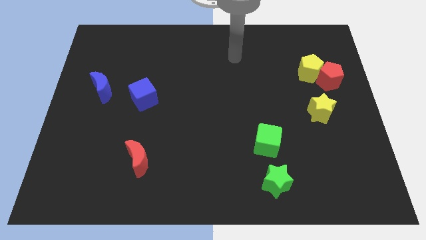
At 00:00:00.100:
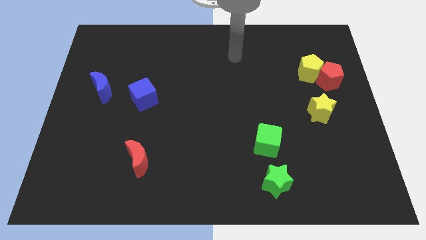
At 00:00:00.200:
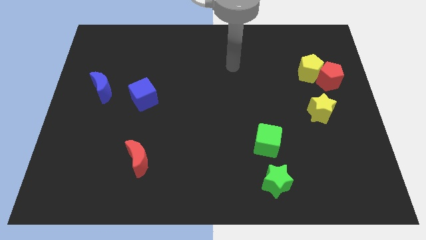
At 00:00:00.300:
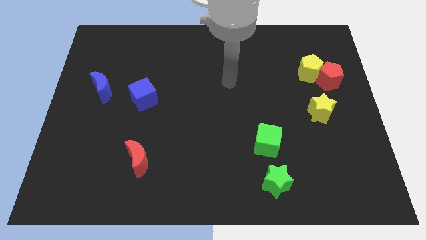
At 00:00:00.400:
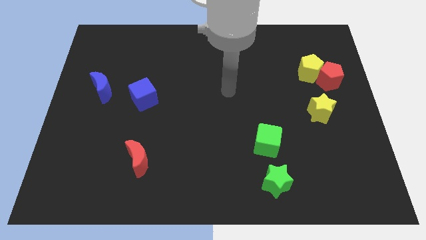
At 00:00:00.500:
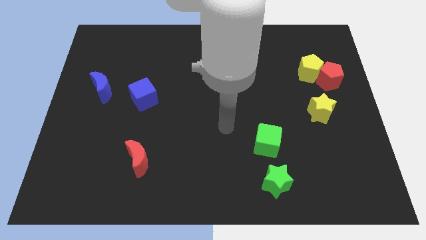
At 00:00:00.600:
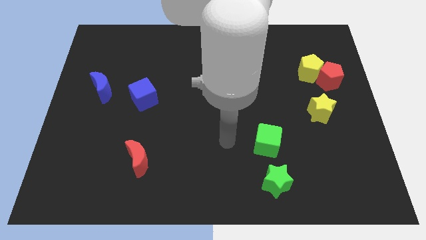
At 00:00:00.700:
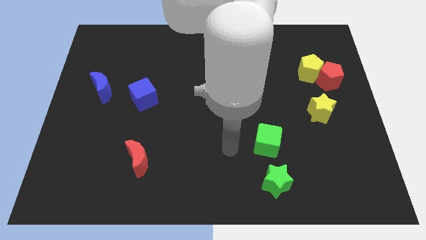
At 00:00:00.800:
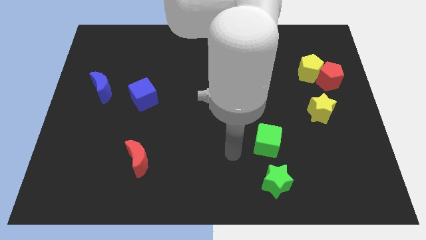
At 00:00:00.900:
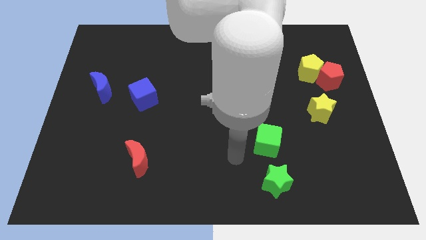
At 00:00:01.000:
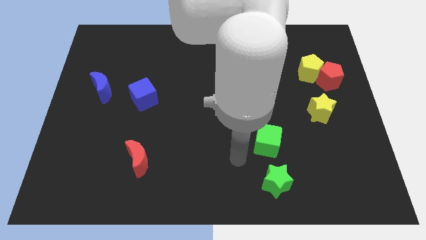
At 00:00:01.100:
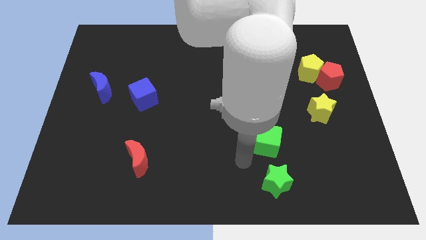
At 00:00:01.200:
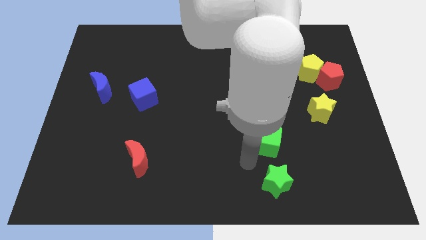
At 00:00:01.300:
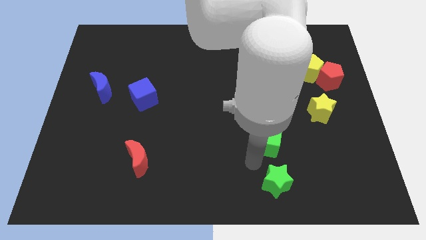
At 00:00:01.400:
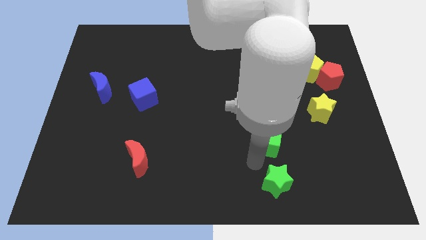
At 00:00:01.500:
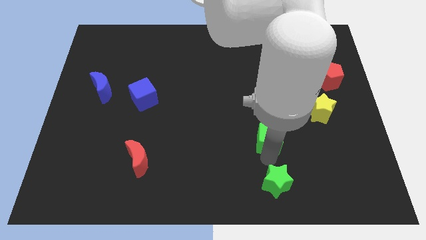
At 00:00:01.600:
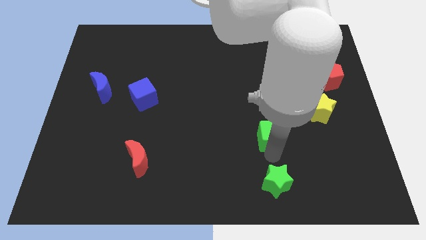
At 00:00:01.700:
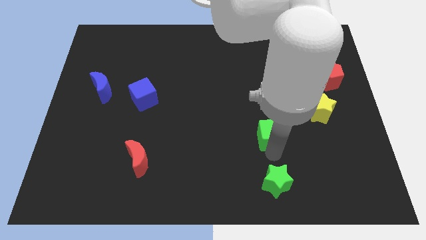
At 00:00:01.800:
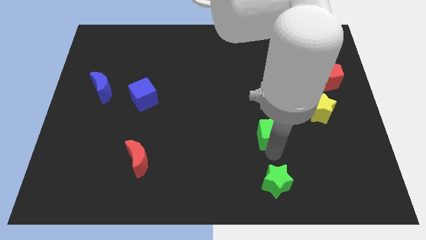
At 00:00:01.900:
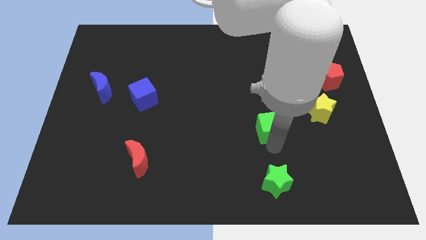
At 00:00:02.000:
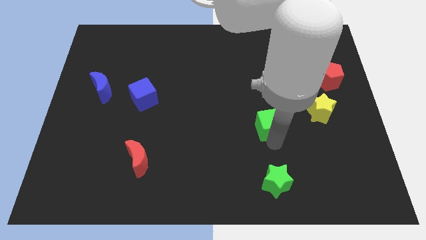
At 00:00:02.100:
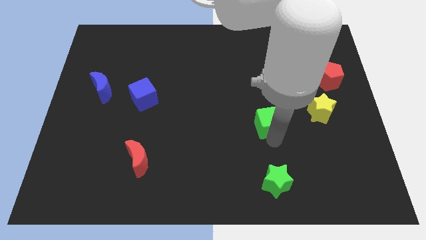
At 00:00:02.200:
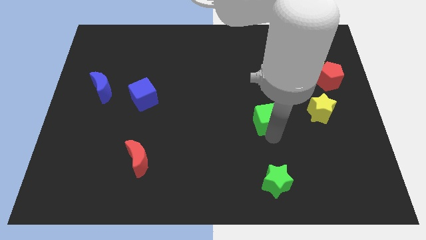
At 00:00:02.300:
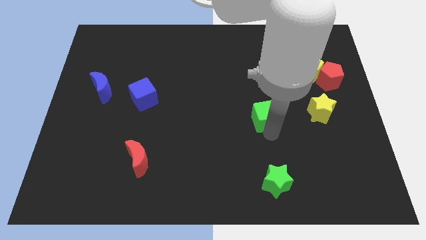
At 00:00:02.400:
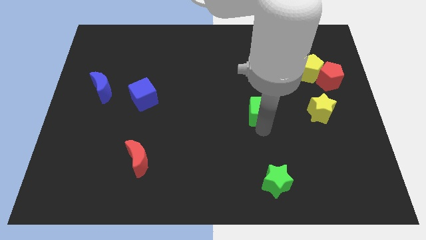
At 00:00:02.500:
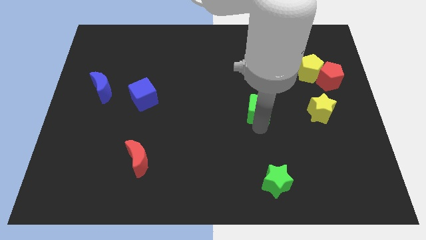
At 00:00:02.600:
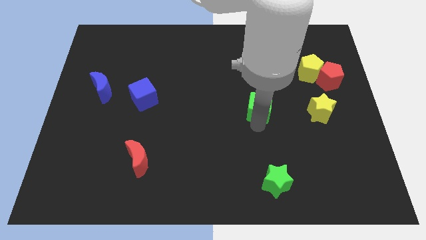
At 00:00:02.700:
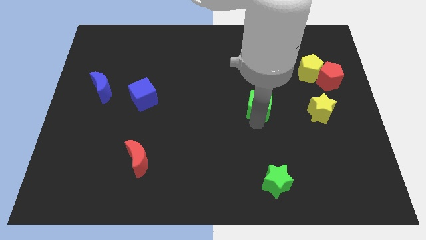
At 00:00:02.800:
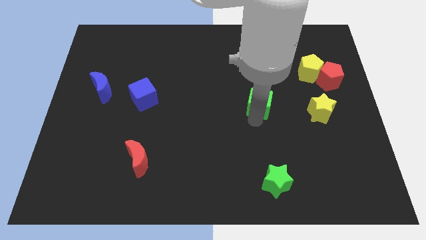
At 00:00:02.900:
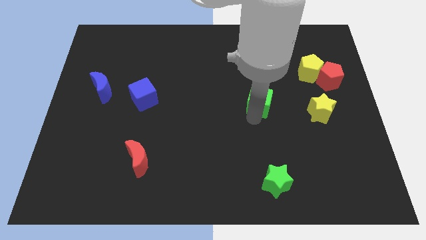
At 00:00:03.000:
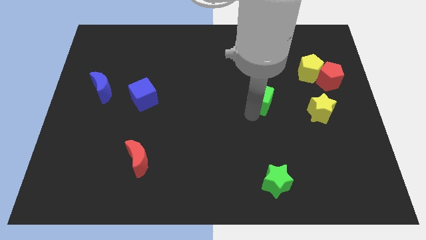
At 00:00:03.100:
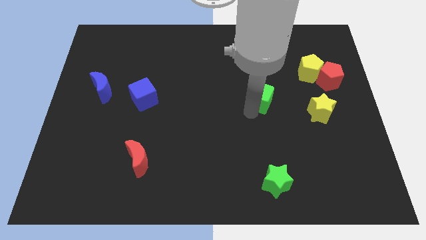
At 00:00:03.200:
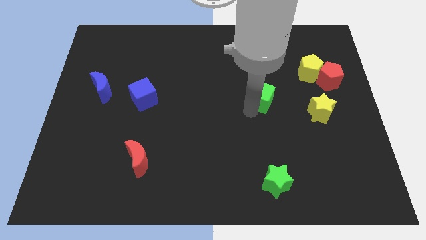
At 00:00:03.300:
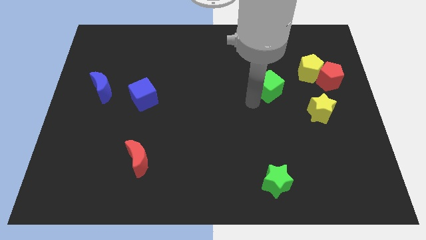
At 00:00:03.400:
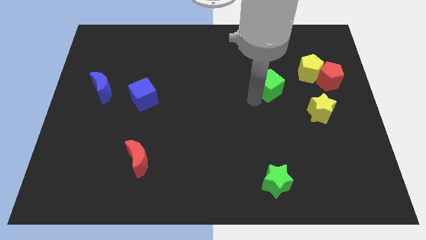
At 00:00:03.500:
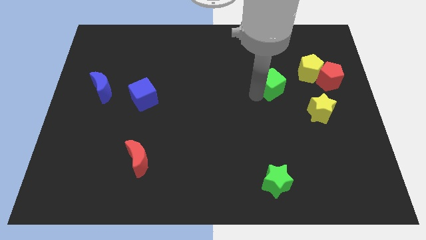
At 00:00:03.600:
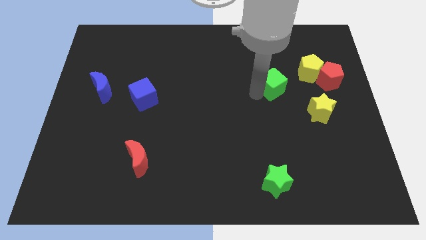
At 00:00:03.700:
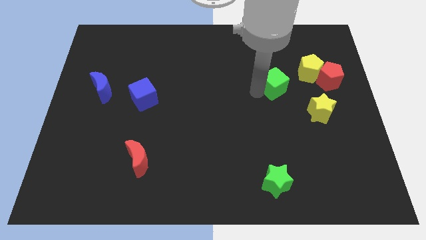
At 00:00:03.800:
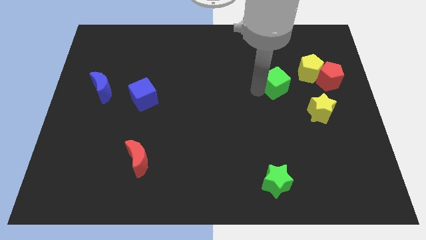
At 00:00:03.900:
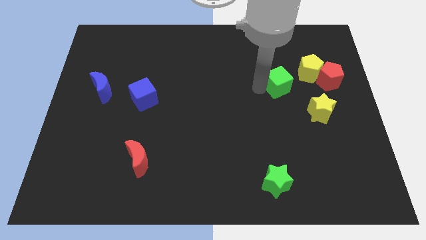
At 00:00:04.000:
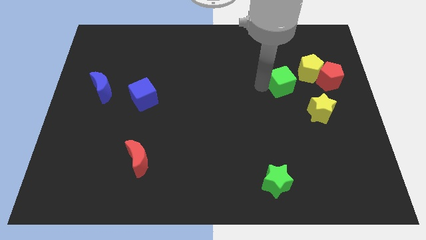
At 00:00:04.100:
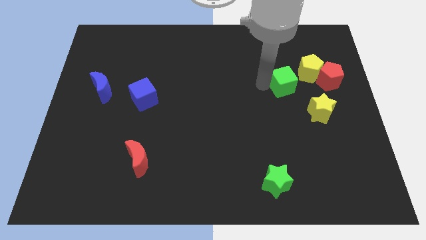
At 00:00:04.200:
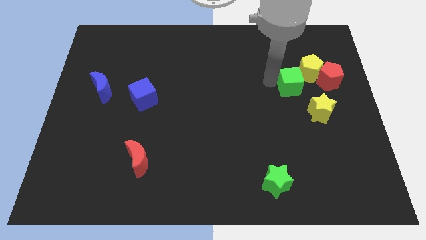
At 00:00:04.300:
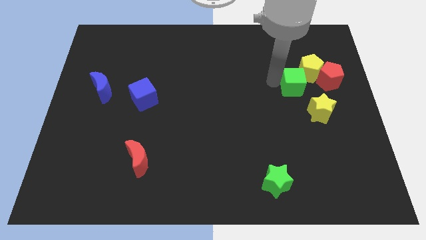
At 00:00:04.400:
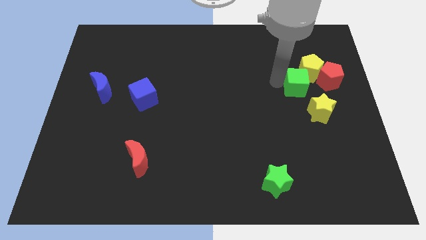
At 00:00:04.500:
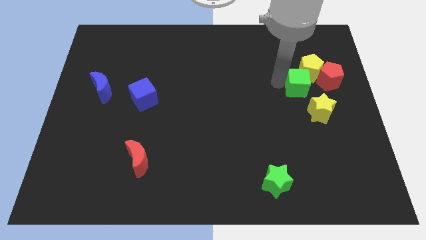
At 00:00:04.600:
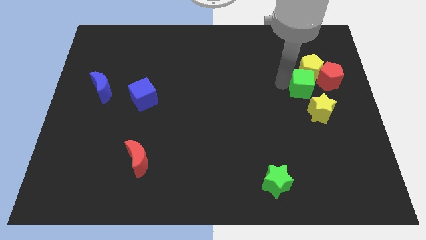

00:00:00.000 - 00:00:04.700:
push the green cube close to the yellow pentagon

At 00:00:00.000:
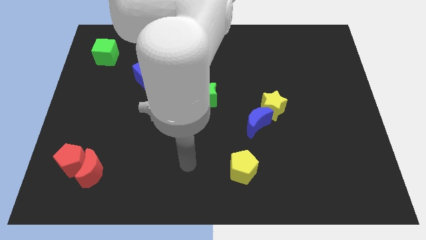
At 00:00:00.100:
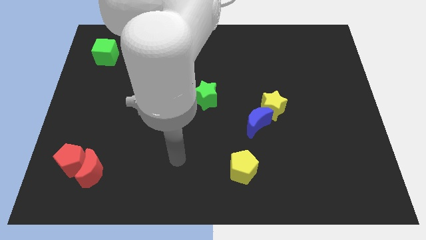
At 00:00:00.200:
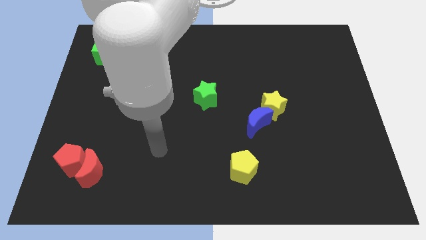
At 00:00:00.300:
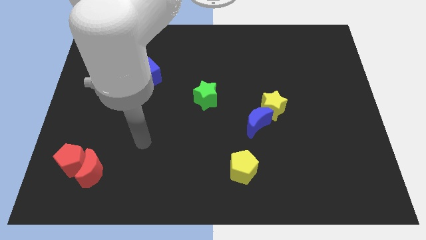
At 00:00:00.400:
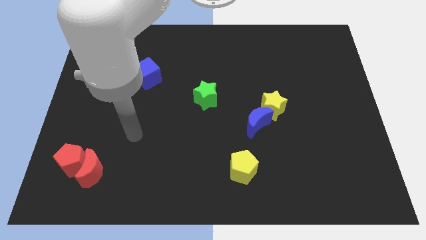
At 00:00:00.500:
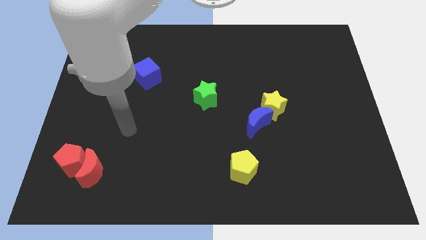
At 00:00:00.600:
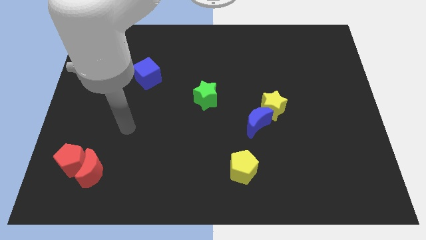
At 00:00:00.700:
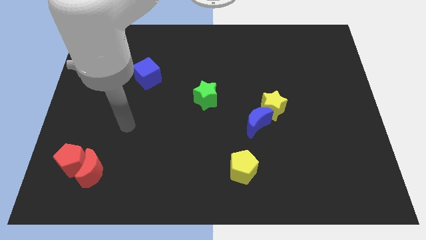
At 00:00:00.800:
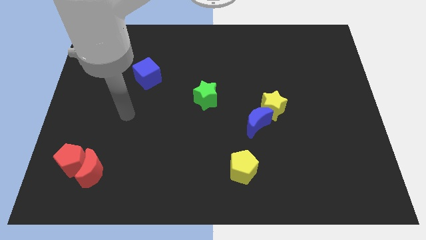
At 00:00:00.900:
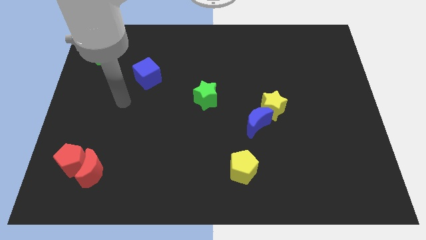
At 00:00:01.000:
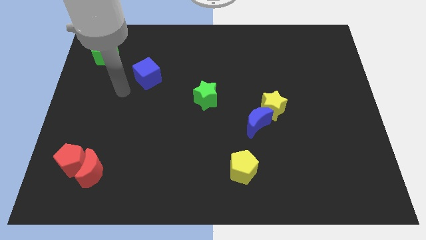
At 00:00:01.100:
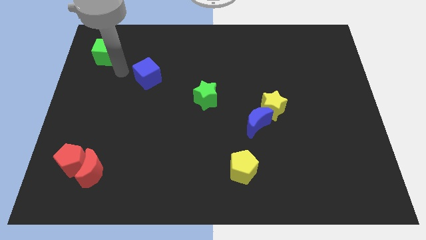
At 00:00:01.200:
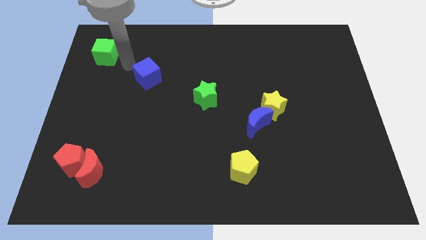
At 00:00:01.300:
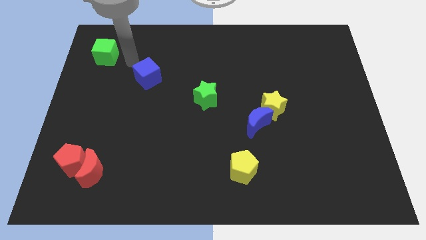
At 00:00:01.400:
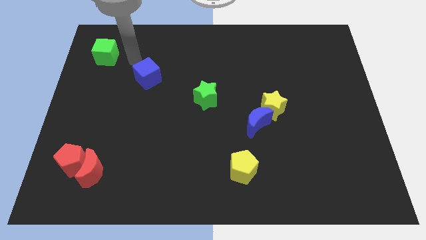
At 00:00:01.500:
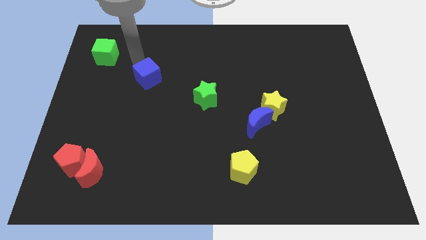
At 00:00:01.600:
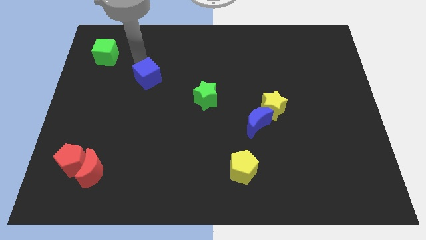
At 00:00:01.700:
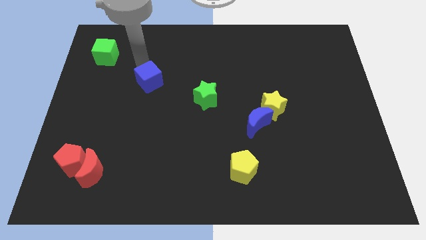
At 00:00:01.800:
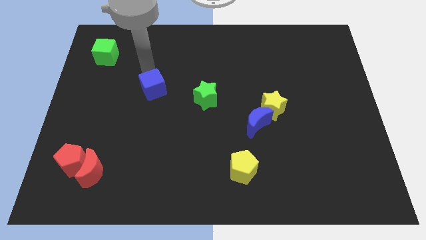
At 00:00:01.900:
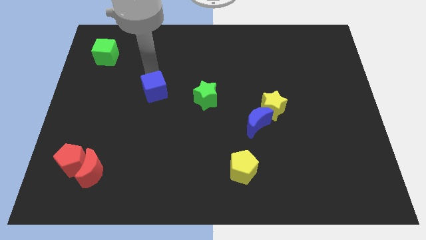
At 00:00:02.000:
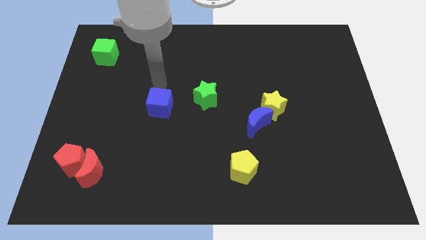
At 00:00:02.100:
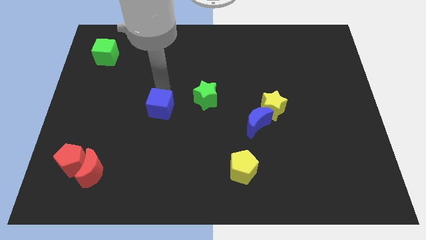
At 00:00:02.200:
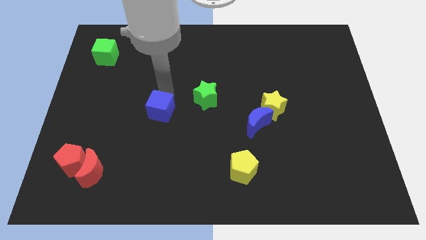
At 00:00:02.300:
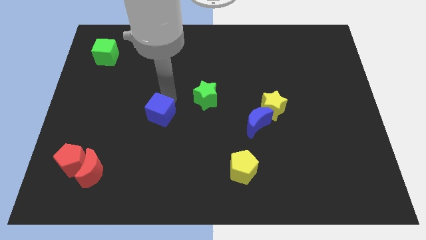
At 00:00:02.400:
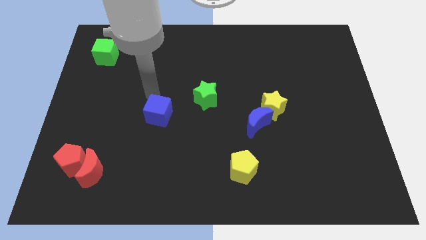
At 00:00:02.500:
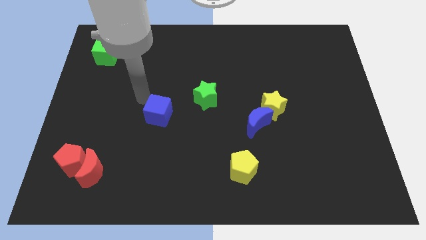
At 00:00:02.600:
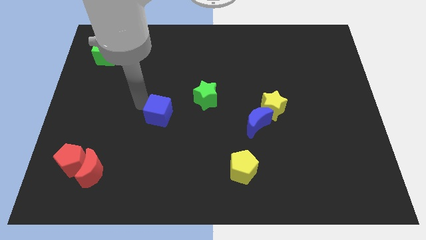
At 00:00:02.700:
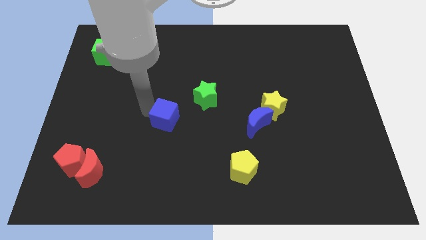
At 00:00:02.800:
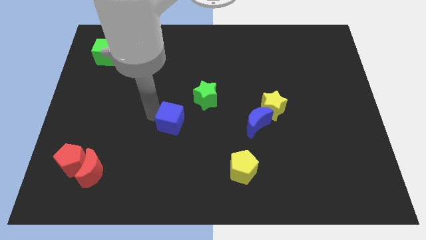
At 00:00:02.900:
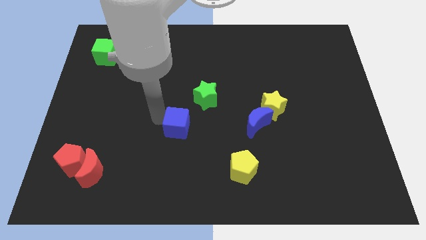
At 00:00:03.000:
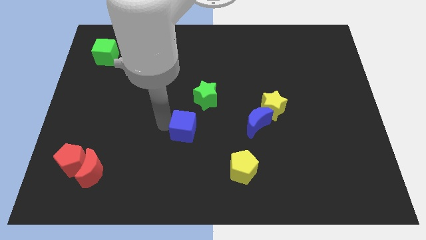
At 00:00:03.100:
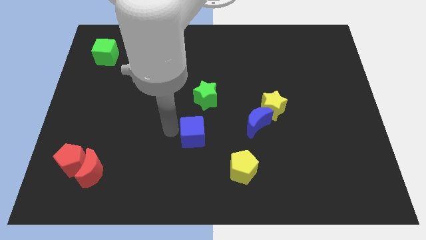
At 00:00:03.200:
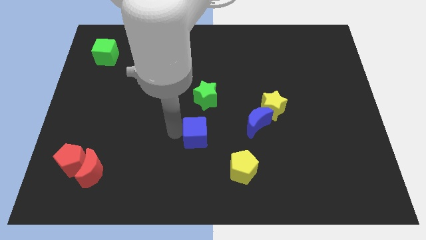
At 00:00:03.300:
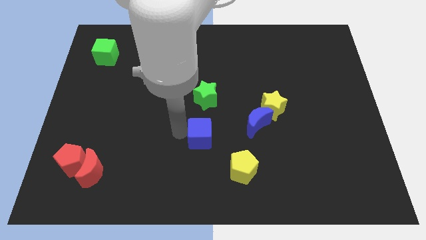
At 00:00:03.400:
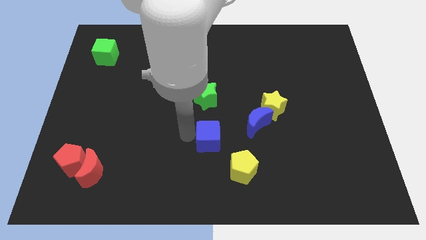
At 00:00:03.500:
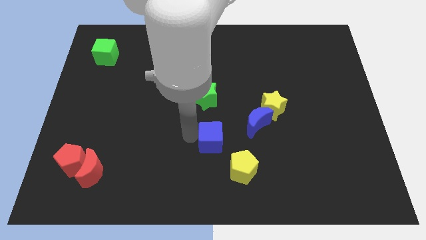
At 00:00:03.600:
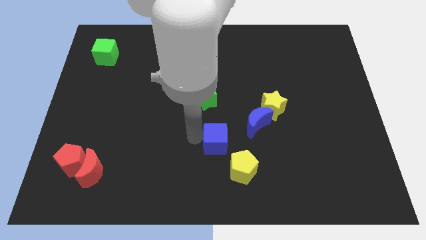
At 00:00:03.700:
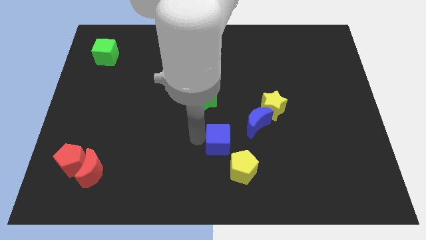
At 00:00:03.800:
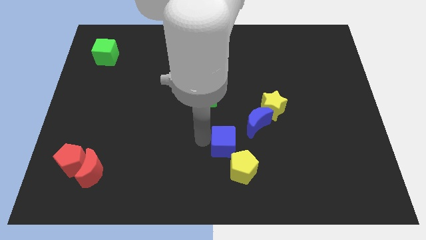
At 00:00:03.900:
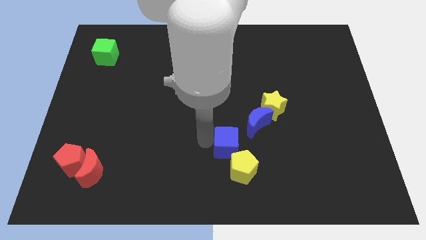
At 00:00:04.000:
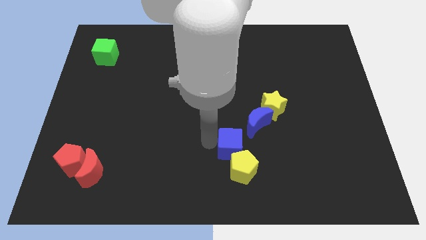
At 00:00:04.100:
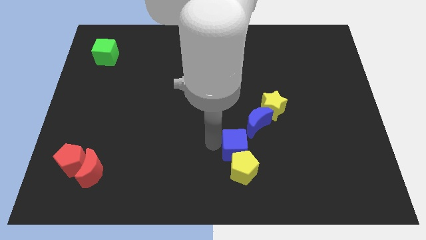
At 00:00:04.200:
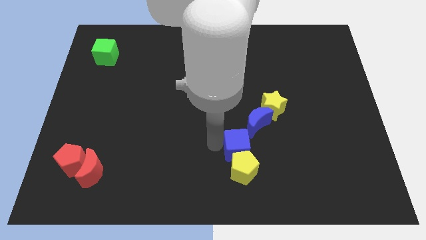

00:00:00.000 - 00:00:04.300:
push the blue cube towards the yellow pentagon
